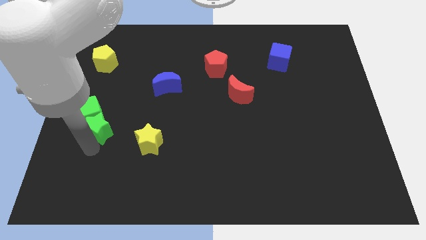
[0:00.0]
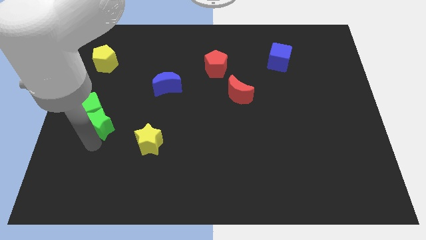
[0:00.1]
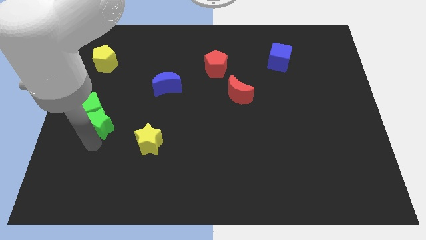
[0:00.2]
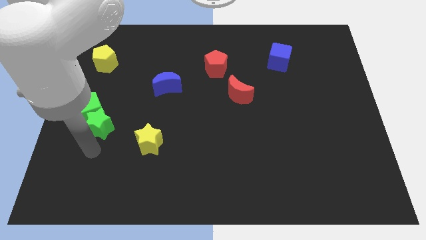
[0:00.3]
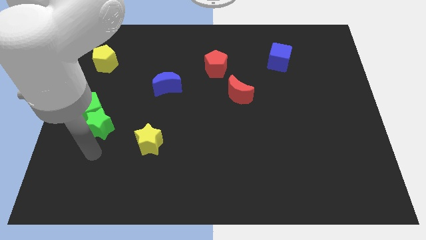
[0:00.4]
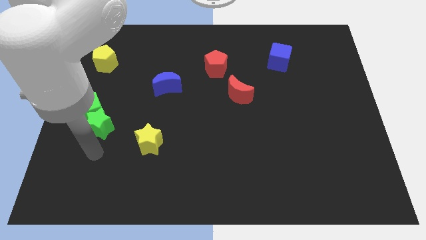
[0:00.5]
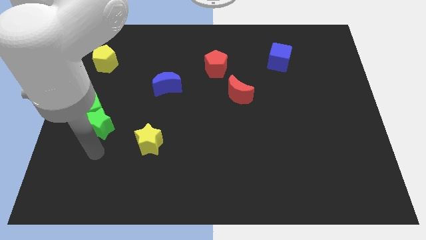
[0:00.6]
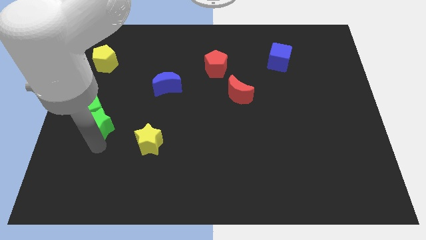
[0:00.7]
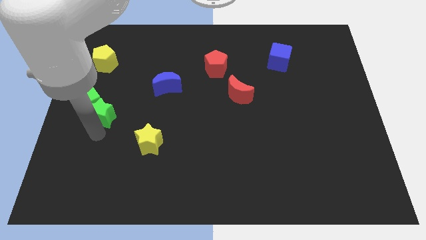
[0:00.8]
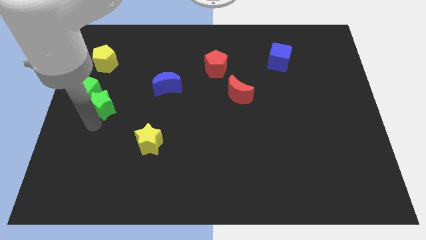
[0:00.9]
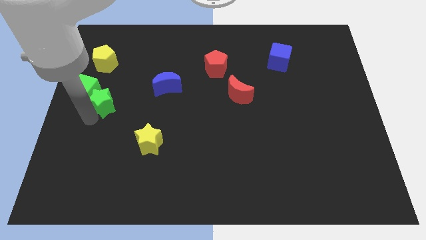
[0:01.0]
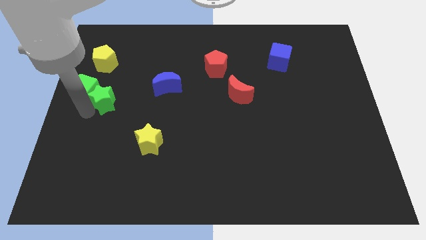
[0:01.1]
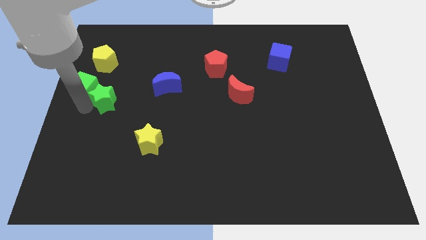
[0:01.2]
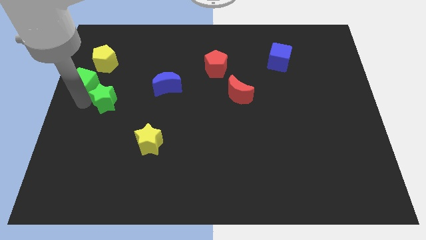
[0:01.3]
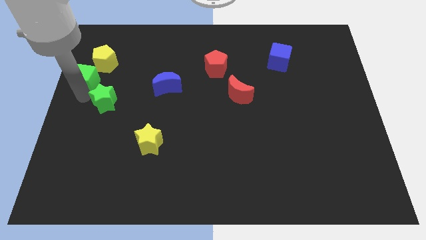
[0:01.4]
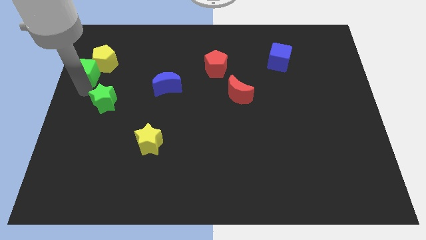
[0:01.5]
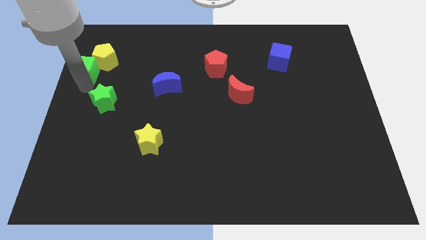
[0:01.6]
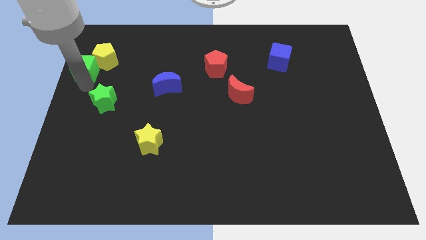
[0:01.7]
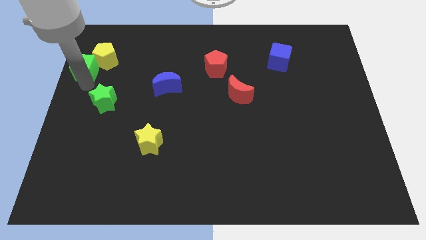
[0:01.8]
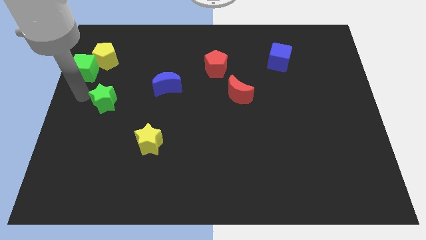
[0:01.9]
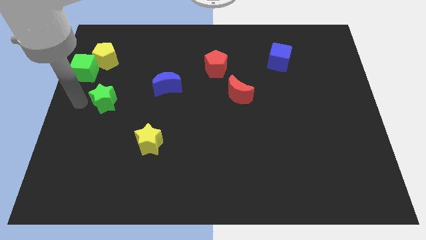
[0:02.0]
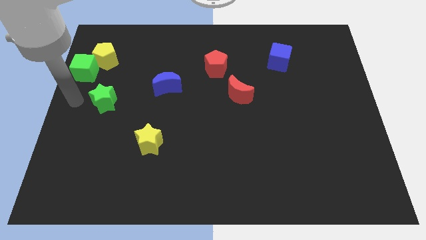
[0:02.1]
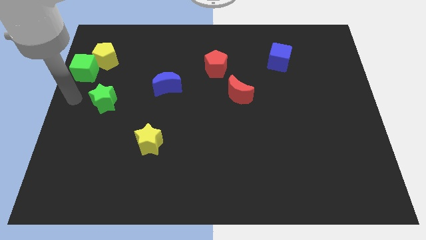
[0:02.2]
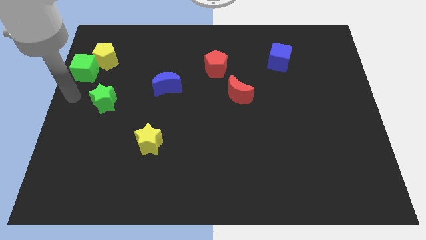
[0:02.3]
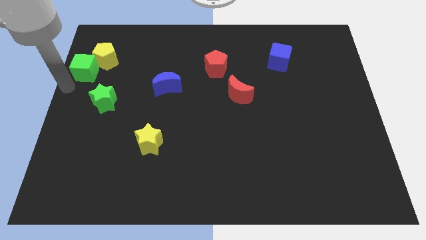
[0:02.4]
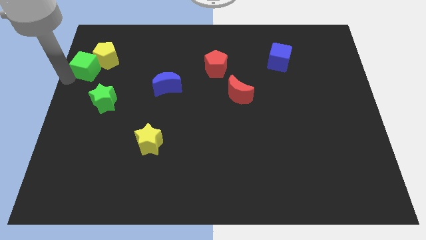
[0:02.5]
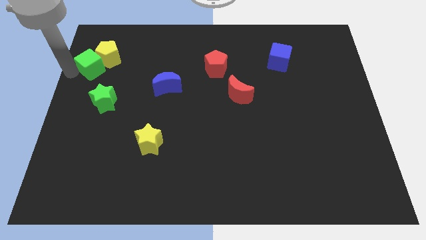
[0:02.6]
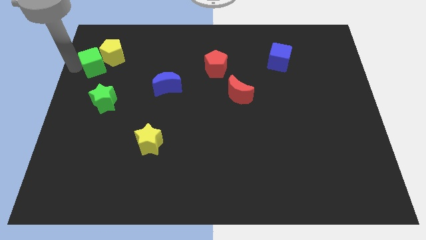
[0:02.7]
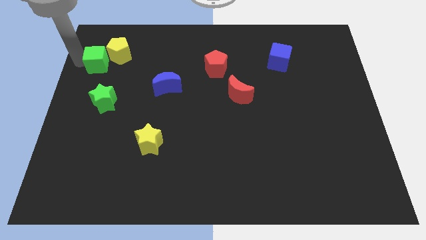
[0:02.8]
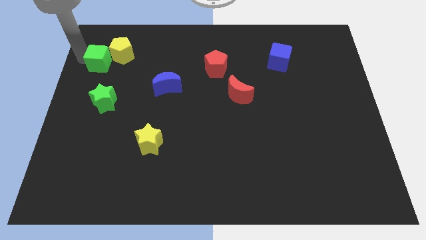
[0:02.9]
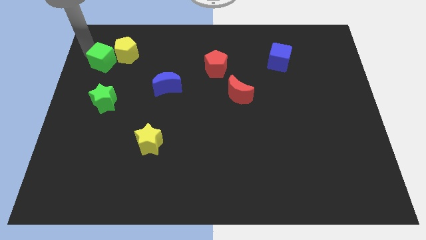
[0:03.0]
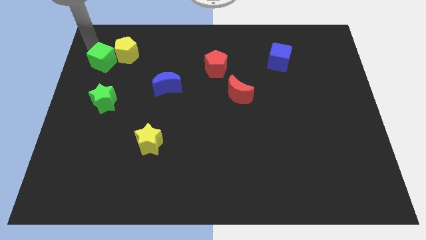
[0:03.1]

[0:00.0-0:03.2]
move green cube close to yellow pentagon

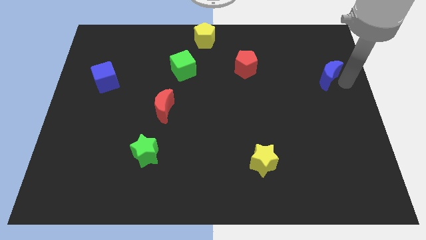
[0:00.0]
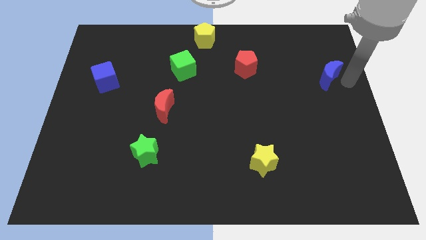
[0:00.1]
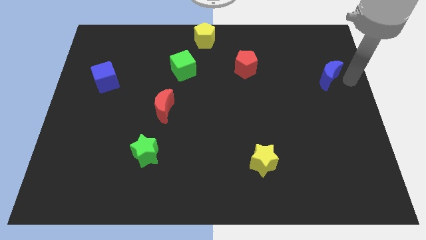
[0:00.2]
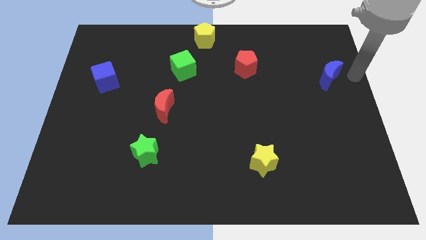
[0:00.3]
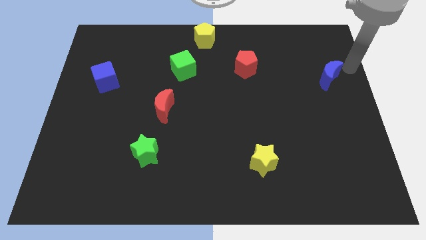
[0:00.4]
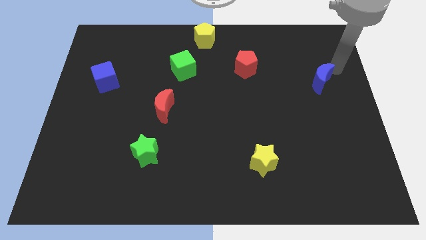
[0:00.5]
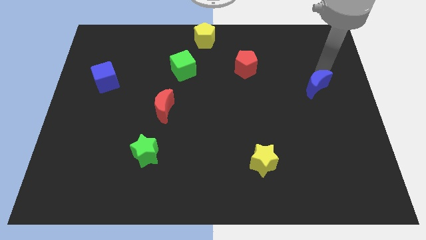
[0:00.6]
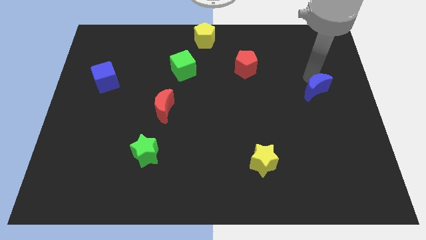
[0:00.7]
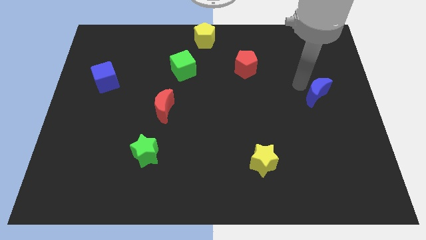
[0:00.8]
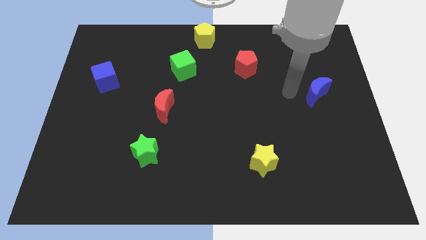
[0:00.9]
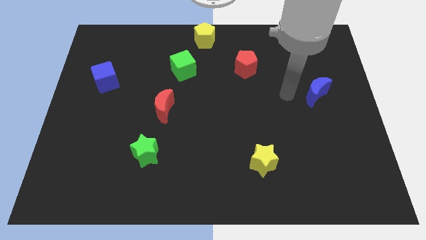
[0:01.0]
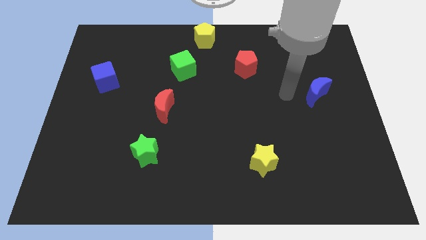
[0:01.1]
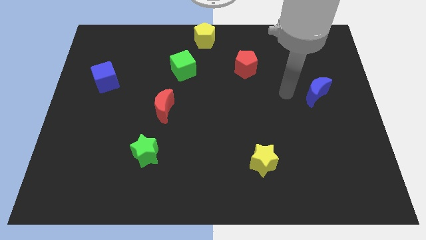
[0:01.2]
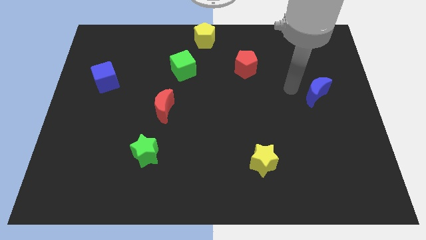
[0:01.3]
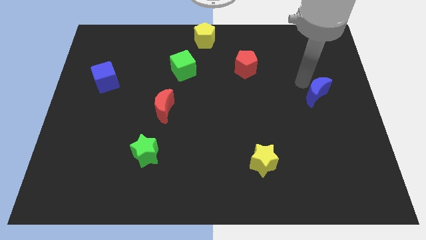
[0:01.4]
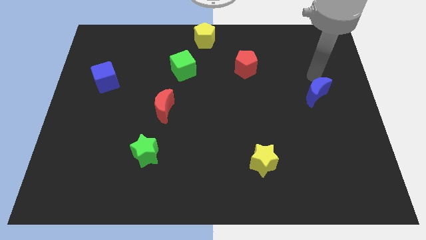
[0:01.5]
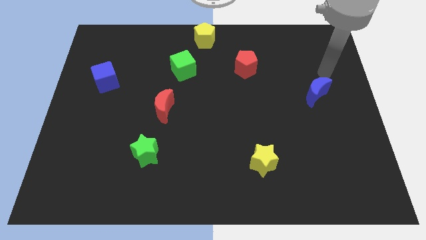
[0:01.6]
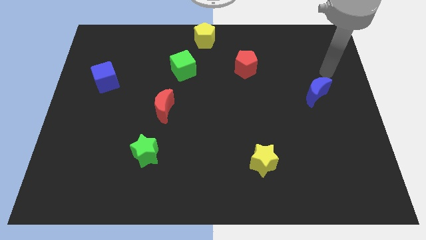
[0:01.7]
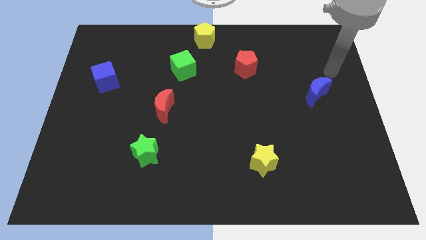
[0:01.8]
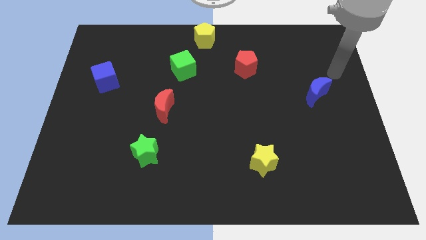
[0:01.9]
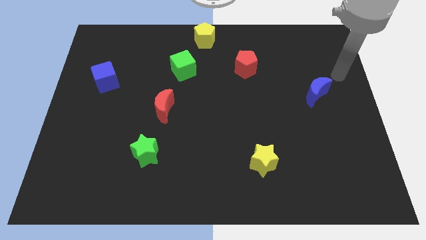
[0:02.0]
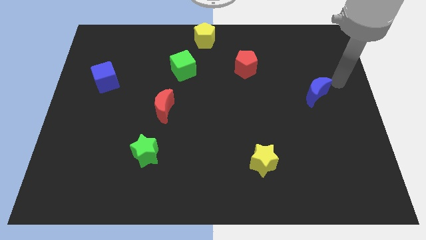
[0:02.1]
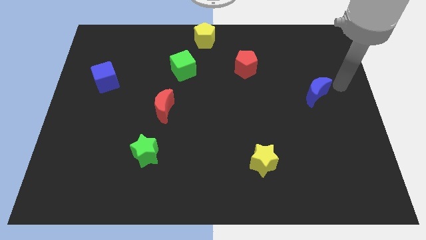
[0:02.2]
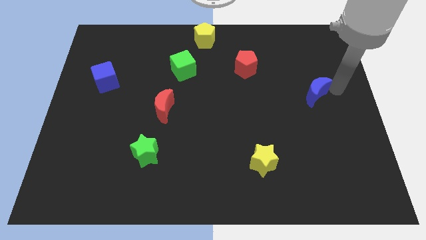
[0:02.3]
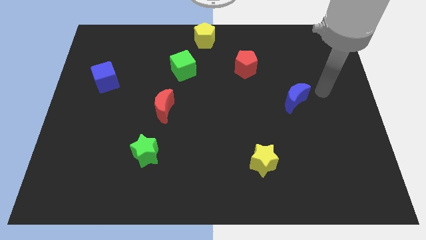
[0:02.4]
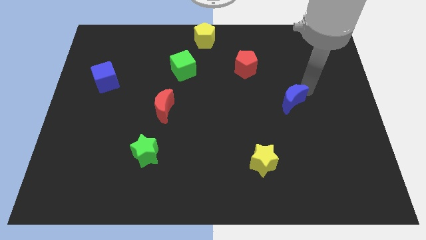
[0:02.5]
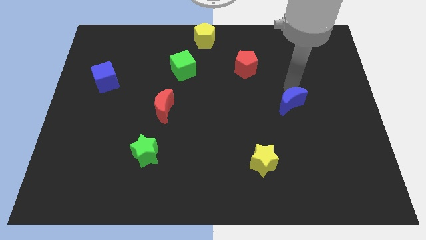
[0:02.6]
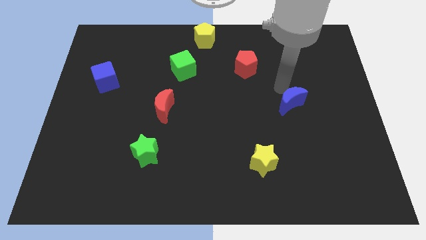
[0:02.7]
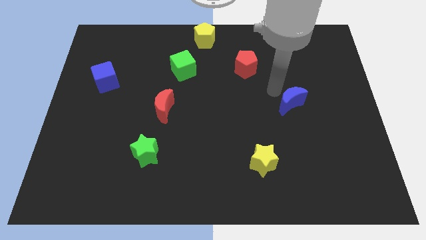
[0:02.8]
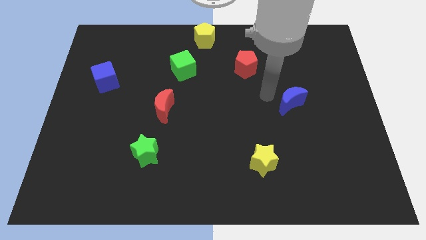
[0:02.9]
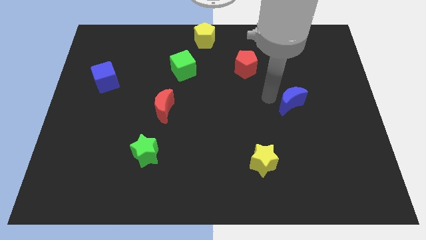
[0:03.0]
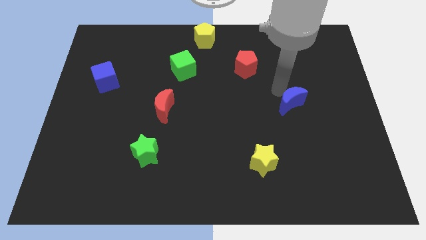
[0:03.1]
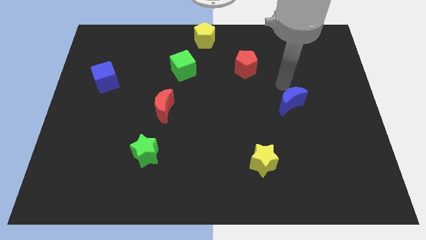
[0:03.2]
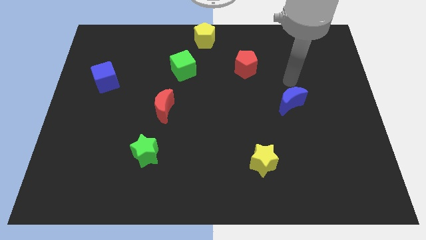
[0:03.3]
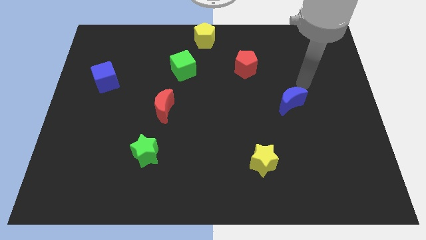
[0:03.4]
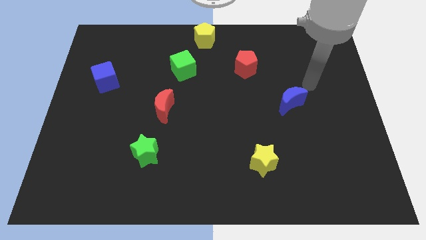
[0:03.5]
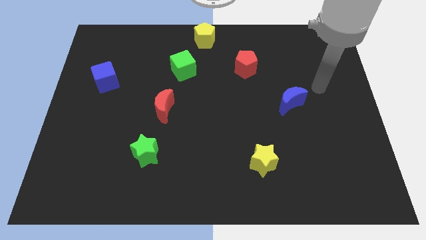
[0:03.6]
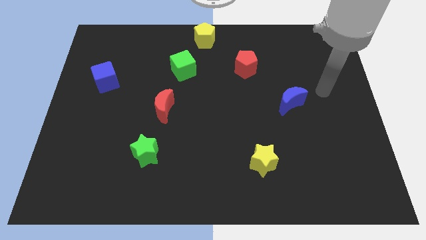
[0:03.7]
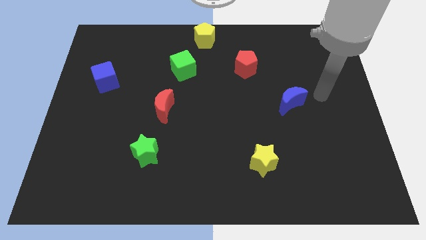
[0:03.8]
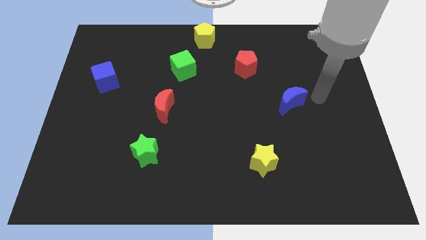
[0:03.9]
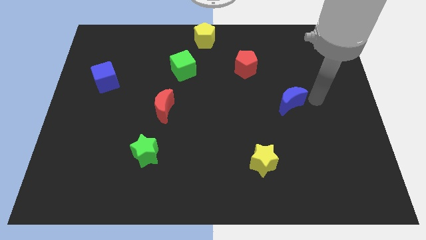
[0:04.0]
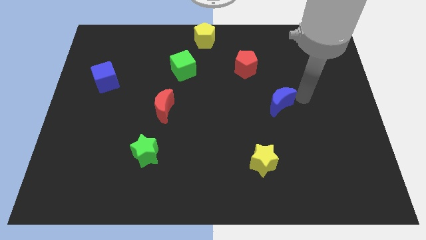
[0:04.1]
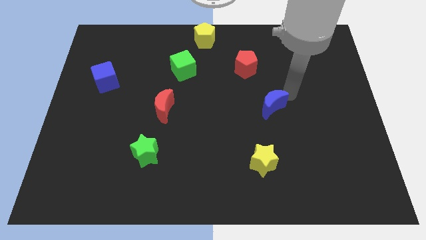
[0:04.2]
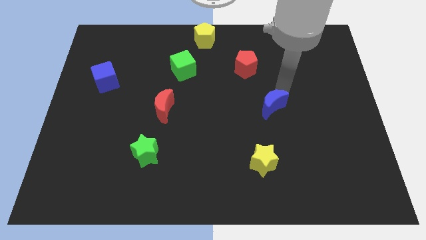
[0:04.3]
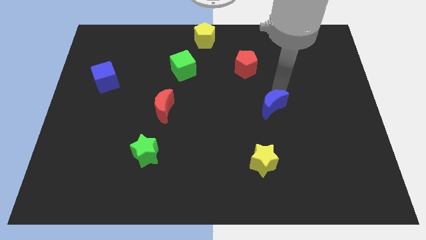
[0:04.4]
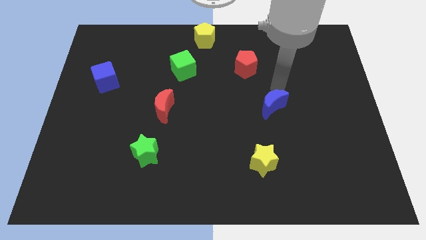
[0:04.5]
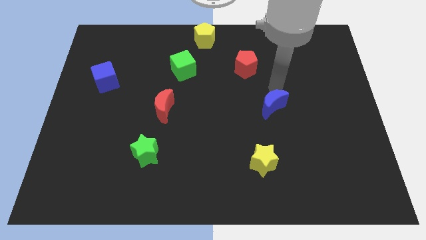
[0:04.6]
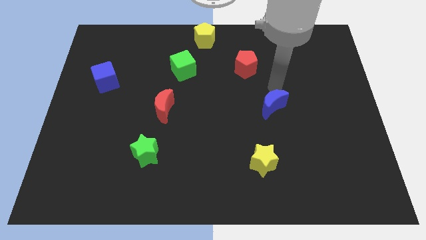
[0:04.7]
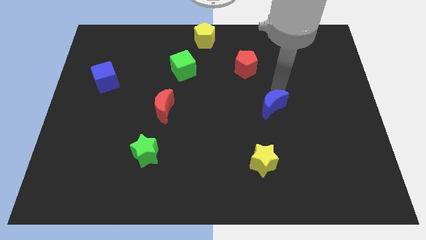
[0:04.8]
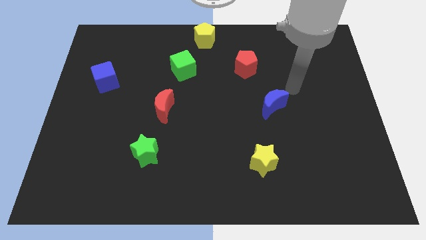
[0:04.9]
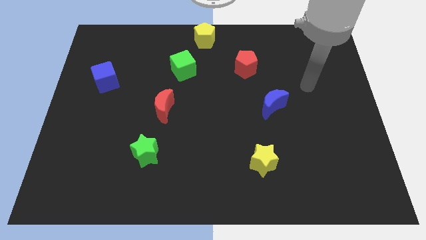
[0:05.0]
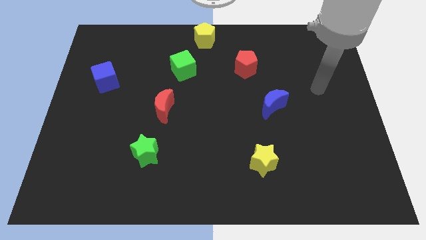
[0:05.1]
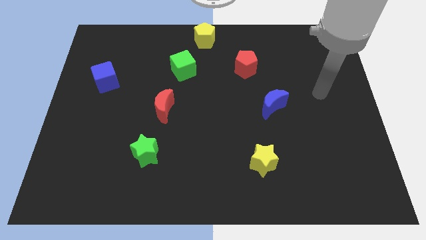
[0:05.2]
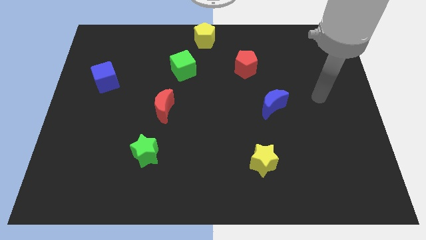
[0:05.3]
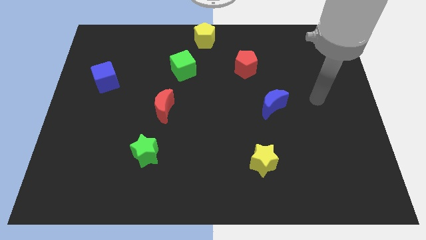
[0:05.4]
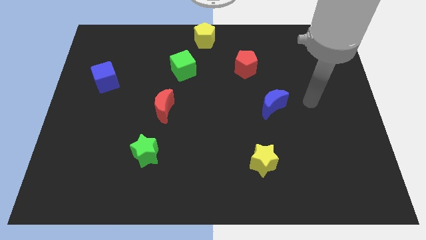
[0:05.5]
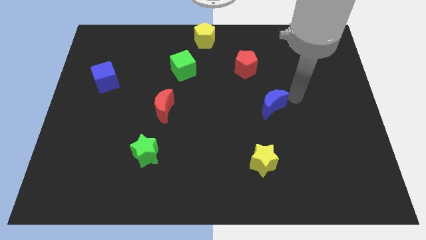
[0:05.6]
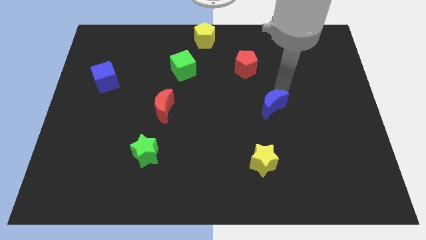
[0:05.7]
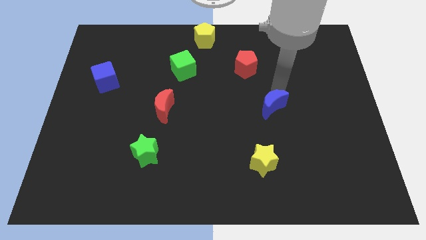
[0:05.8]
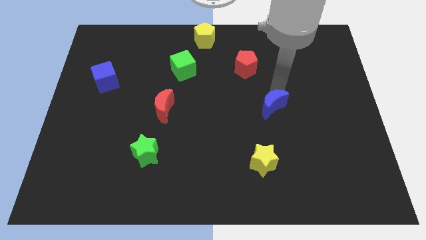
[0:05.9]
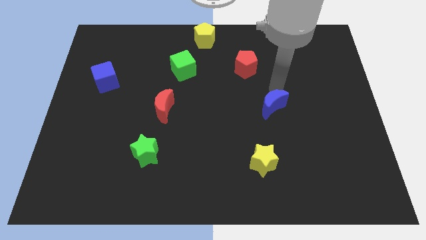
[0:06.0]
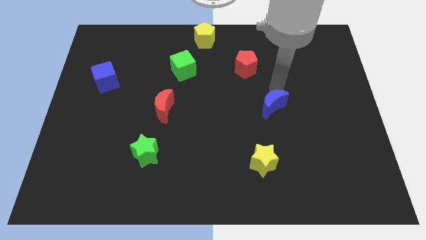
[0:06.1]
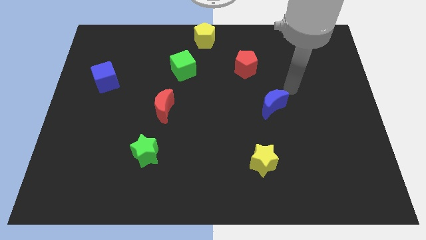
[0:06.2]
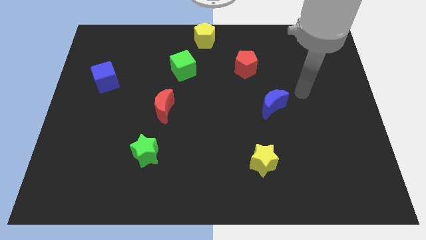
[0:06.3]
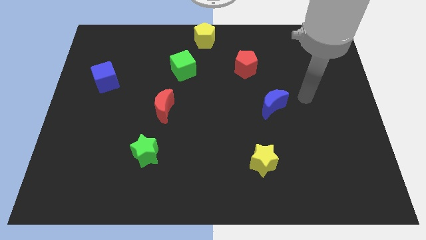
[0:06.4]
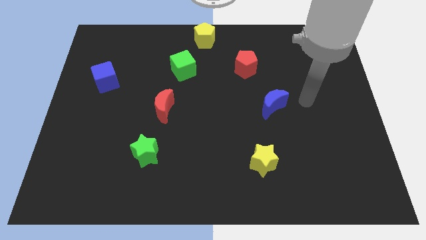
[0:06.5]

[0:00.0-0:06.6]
push the blue crescent towards the red crescent
